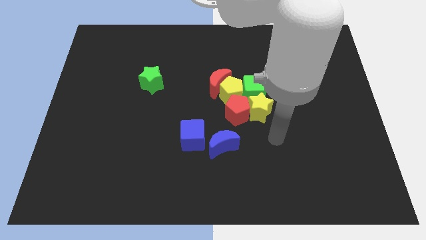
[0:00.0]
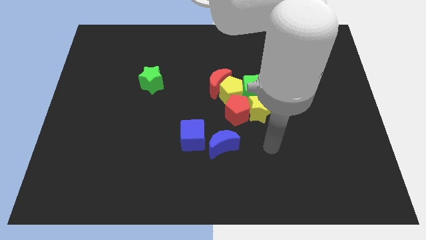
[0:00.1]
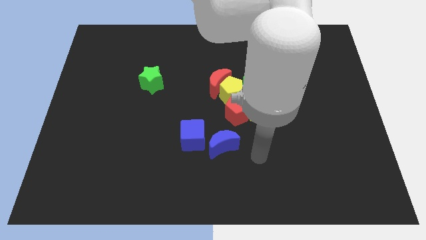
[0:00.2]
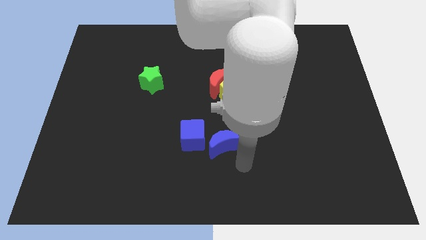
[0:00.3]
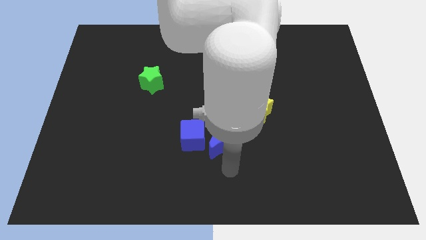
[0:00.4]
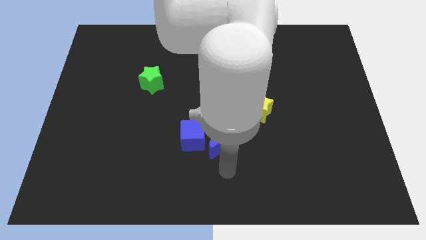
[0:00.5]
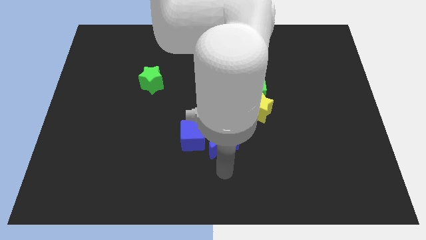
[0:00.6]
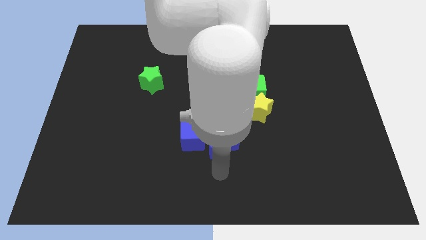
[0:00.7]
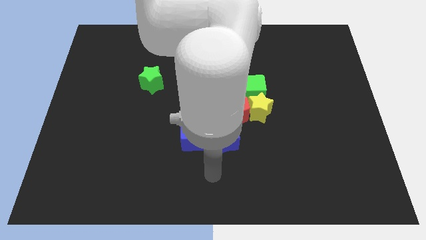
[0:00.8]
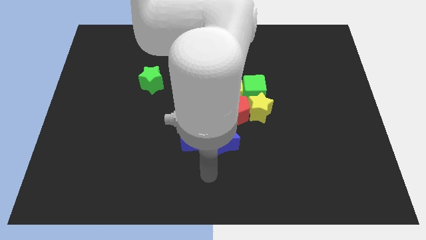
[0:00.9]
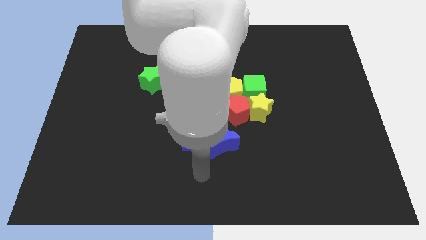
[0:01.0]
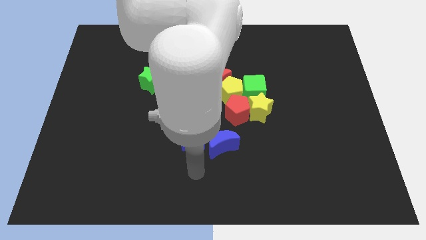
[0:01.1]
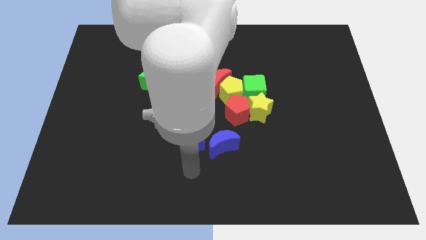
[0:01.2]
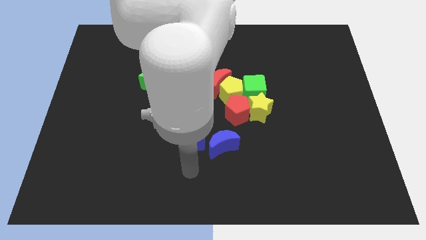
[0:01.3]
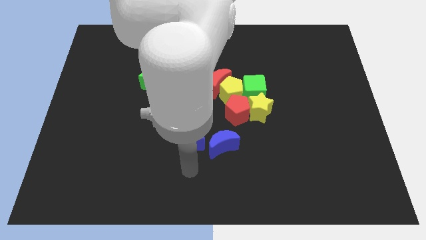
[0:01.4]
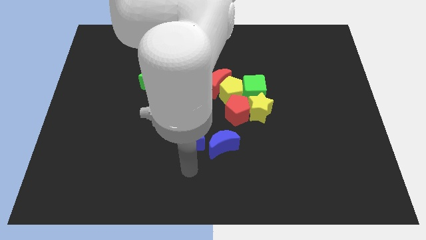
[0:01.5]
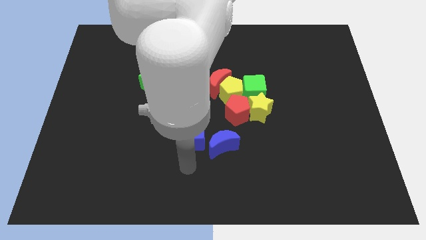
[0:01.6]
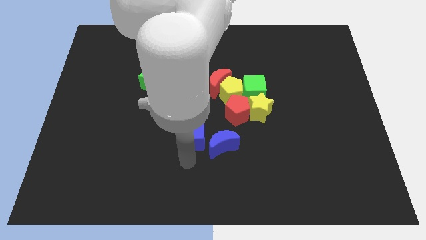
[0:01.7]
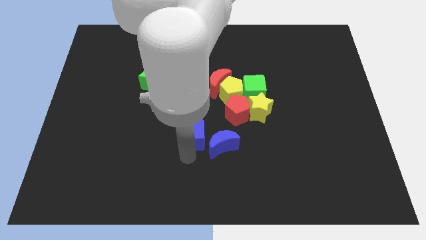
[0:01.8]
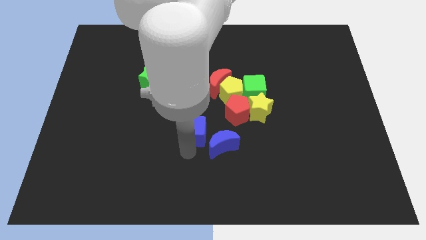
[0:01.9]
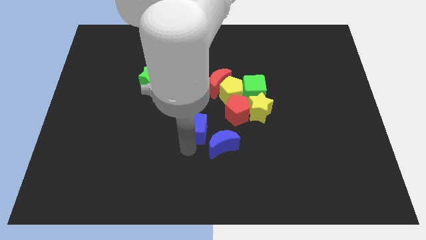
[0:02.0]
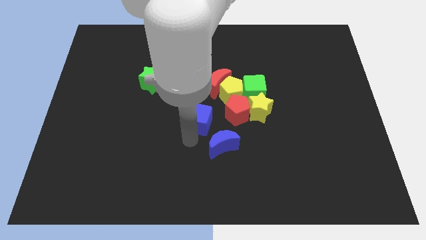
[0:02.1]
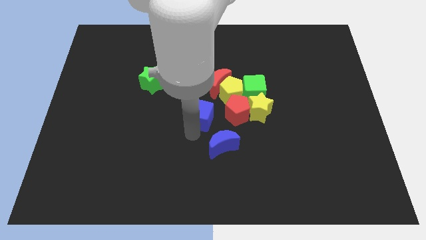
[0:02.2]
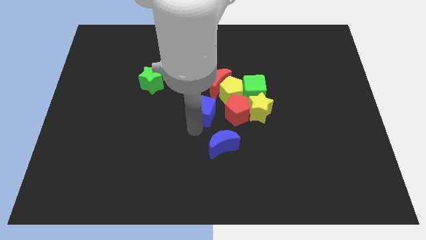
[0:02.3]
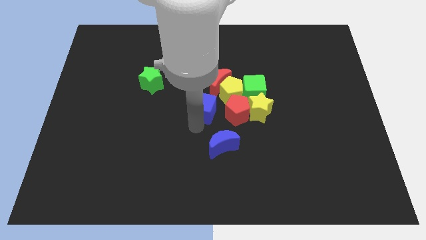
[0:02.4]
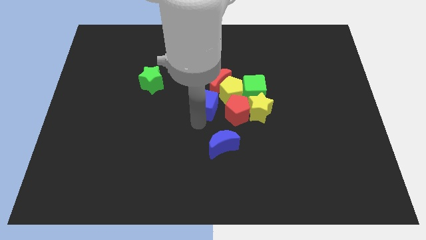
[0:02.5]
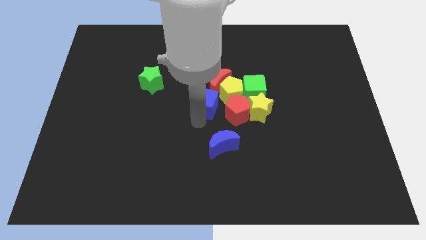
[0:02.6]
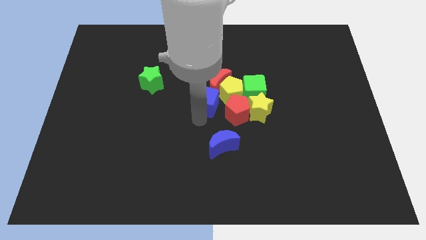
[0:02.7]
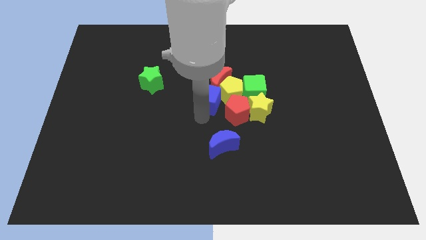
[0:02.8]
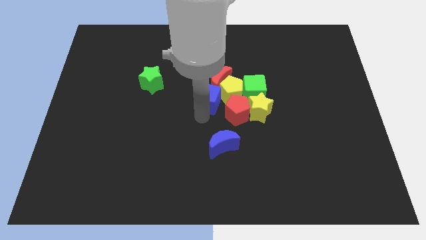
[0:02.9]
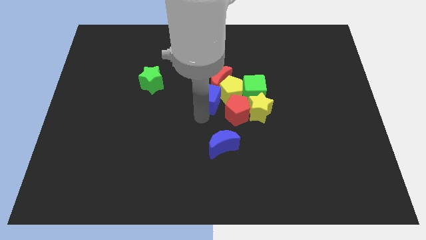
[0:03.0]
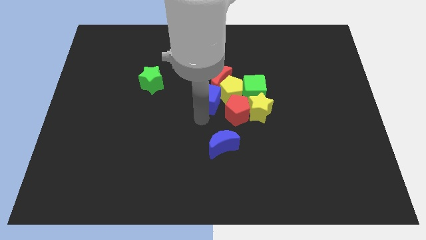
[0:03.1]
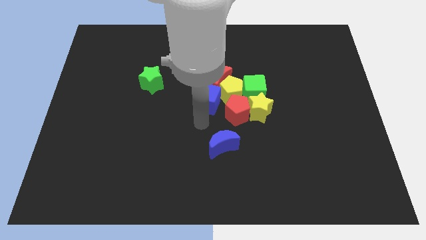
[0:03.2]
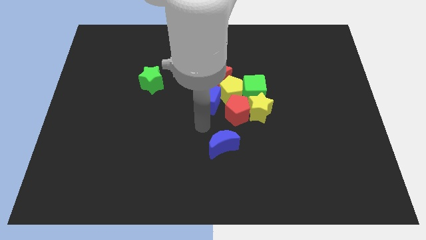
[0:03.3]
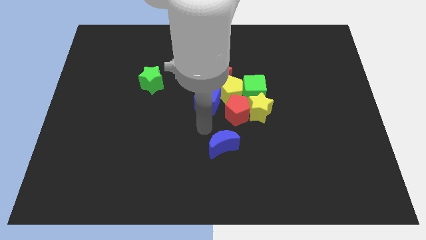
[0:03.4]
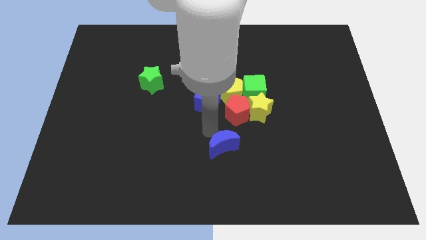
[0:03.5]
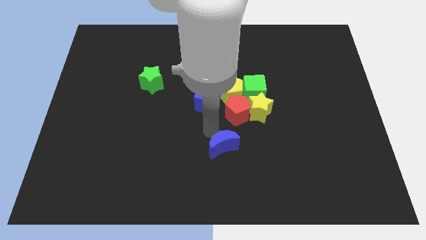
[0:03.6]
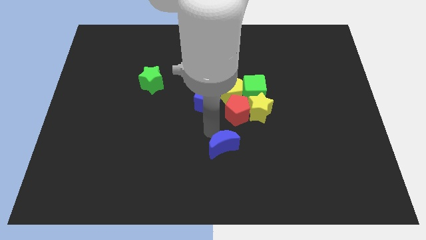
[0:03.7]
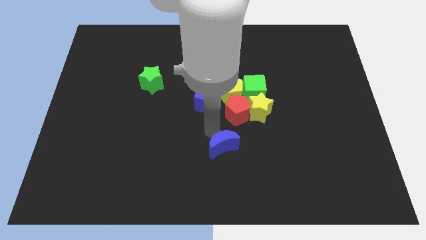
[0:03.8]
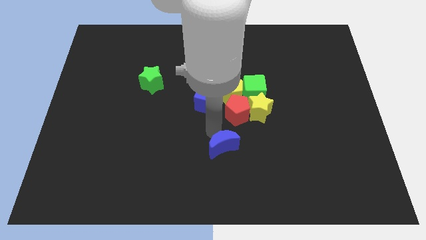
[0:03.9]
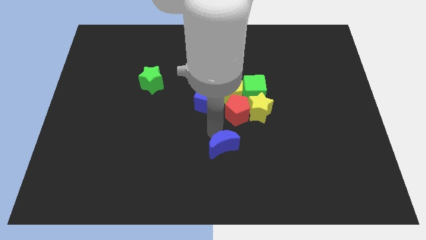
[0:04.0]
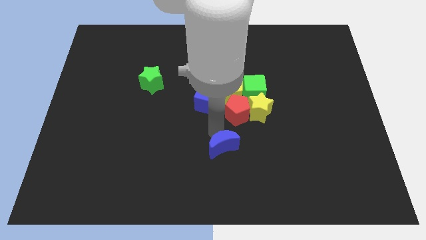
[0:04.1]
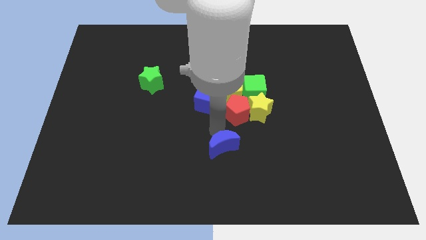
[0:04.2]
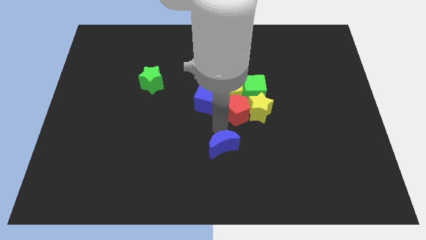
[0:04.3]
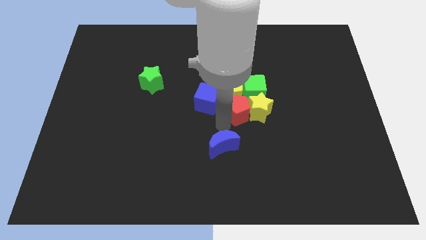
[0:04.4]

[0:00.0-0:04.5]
push the blue cube into red moon

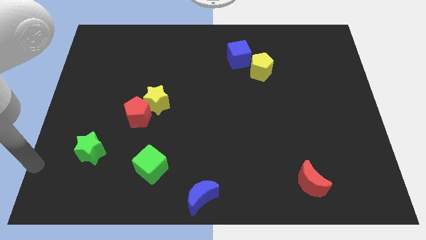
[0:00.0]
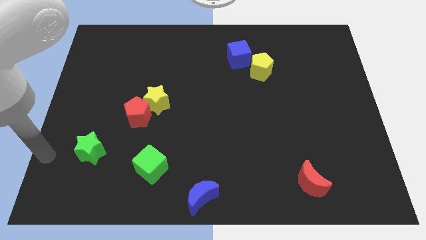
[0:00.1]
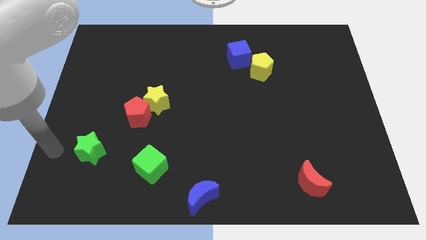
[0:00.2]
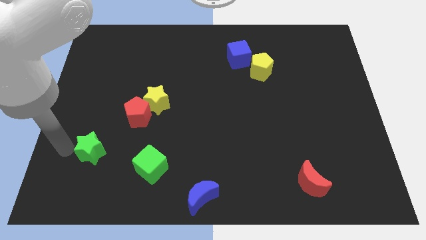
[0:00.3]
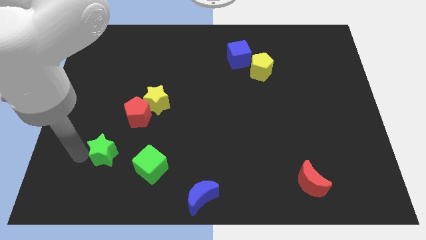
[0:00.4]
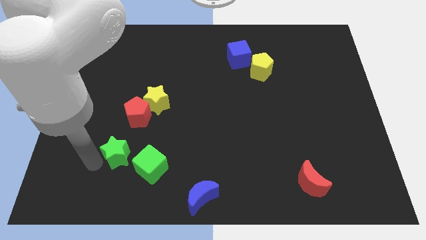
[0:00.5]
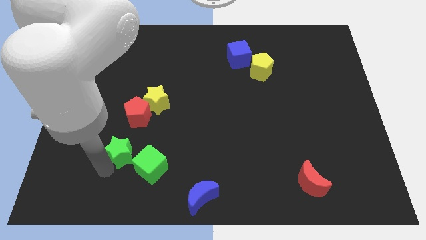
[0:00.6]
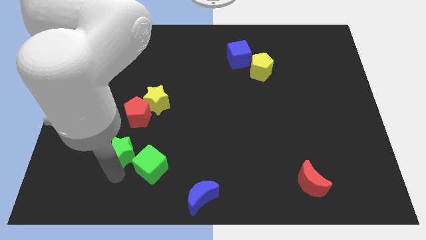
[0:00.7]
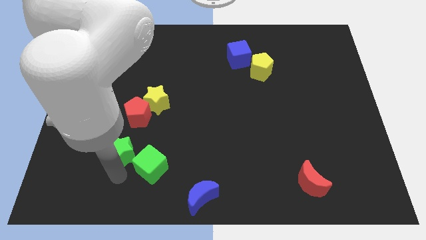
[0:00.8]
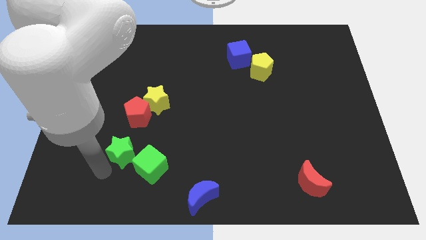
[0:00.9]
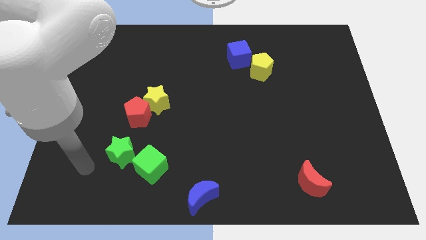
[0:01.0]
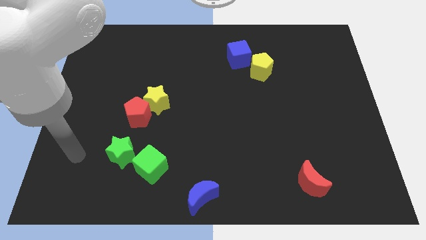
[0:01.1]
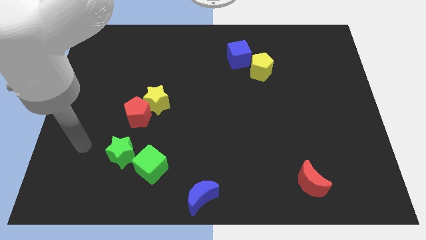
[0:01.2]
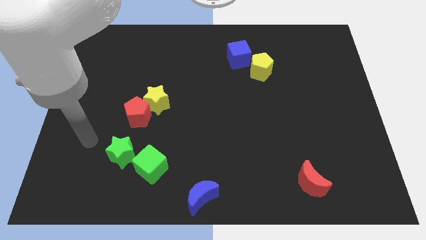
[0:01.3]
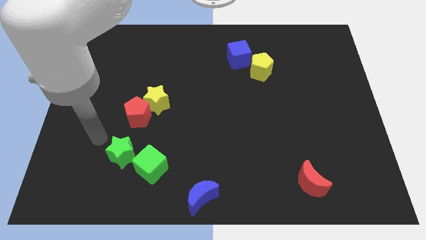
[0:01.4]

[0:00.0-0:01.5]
place green star diagonally top left to the green cube

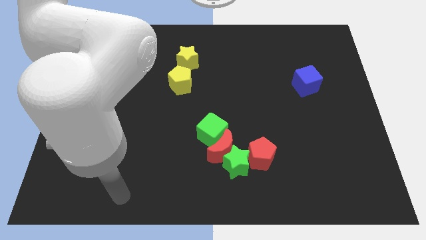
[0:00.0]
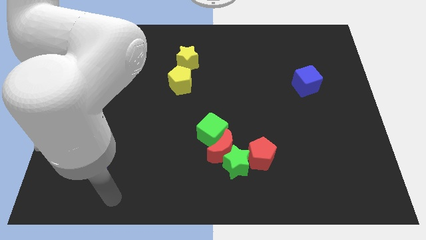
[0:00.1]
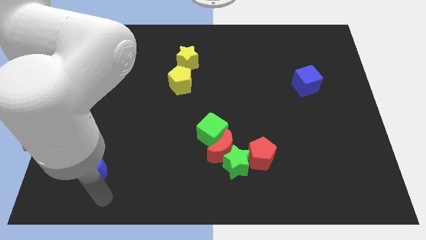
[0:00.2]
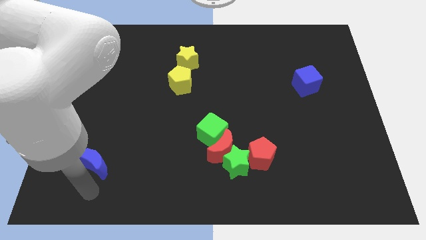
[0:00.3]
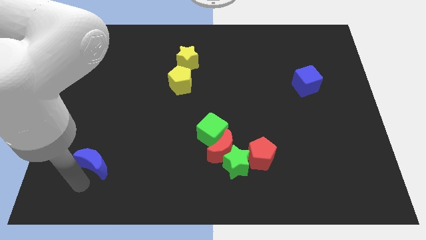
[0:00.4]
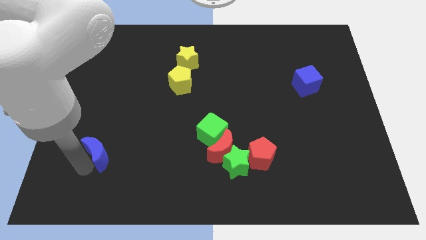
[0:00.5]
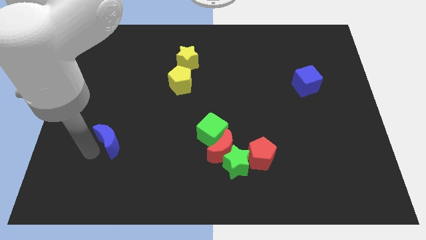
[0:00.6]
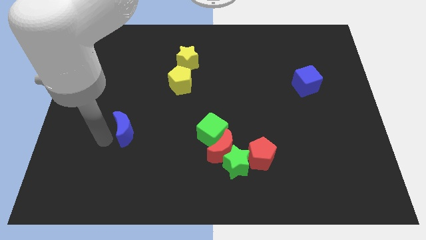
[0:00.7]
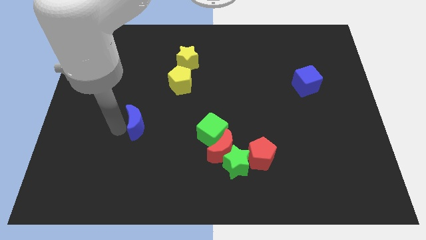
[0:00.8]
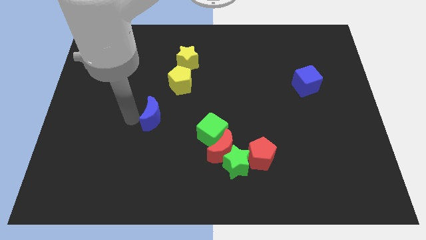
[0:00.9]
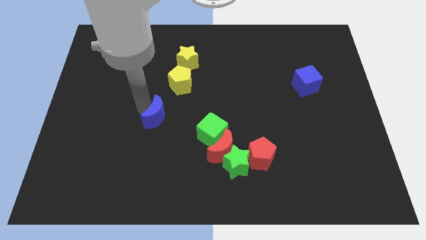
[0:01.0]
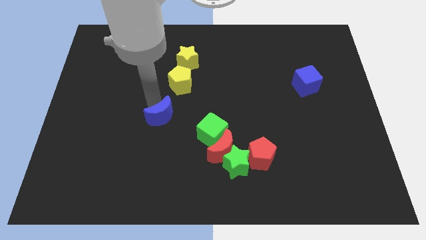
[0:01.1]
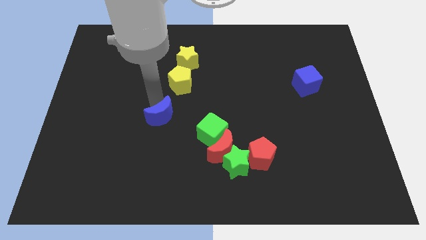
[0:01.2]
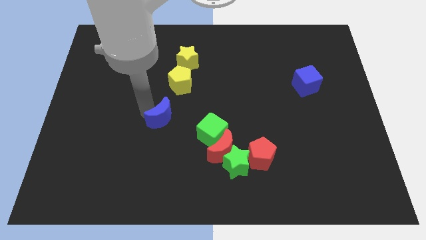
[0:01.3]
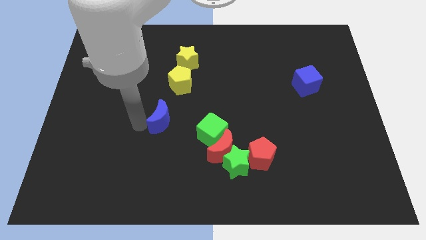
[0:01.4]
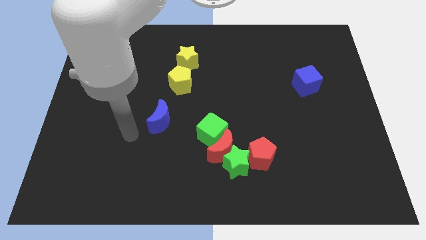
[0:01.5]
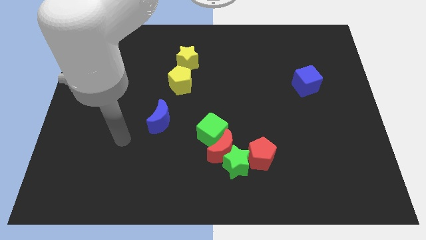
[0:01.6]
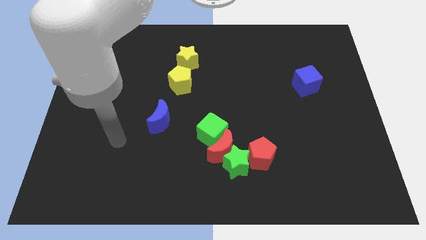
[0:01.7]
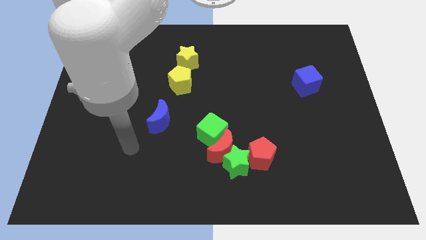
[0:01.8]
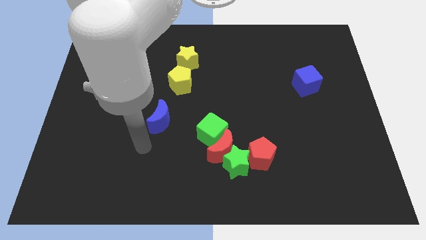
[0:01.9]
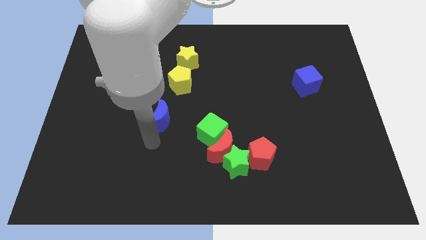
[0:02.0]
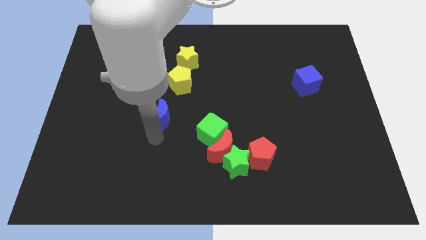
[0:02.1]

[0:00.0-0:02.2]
move the blue moon at the left side bottom of the yellow pentagon

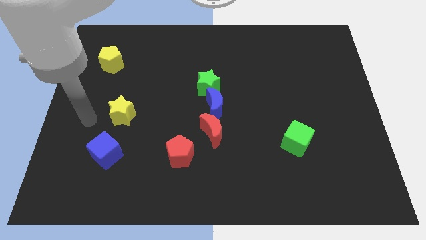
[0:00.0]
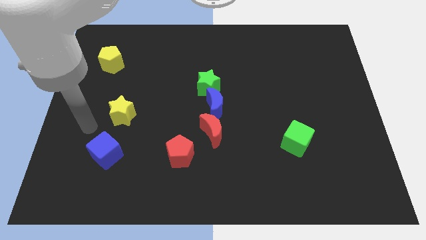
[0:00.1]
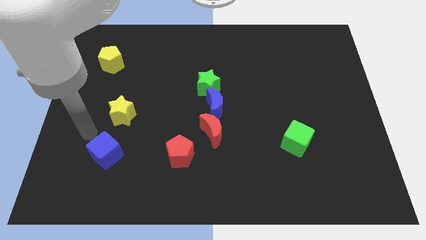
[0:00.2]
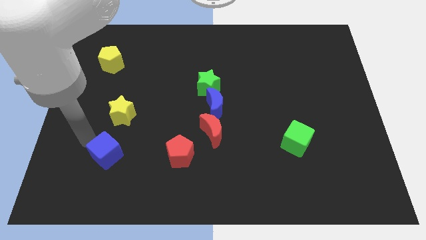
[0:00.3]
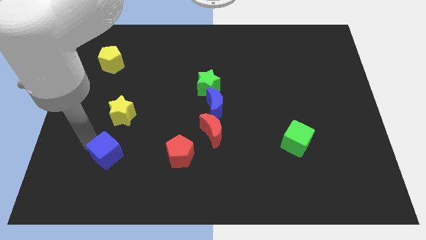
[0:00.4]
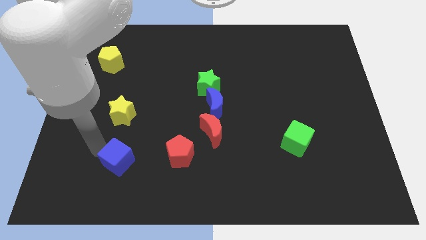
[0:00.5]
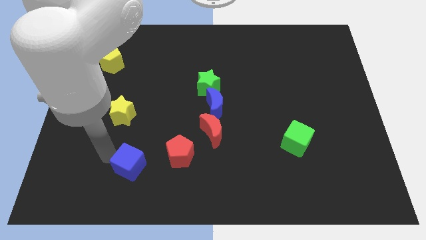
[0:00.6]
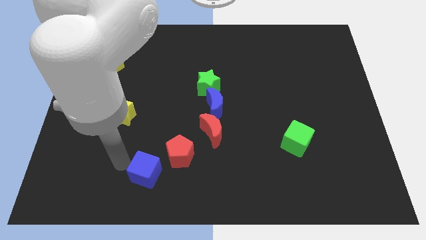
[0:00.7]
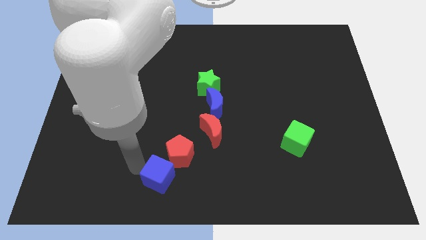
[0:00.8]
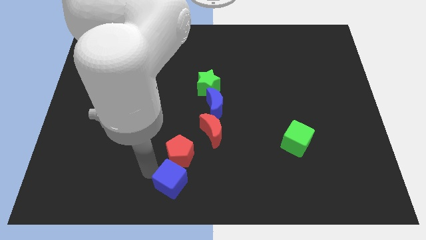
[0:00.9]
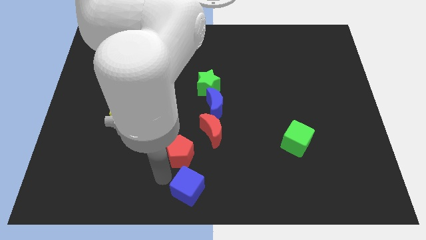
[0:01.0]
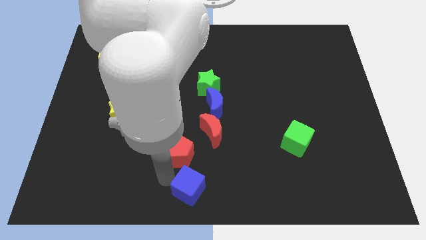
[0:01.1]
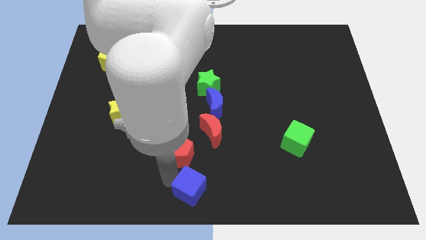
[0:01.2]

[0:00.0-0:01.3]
push the blue cube below the red pentagon
